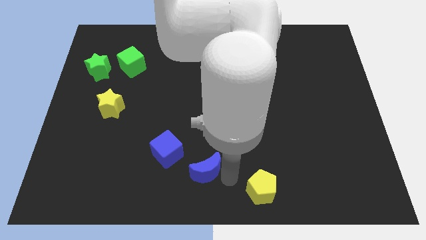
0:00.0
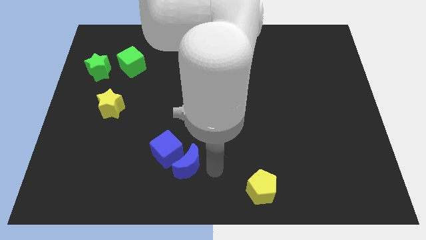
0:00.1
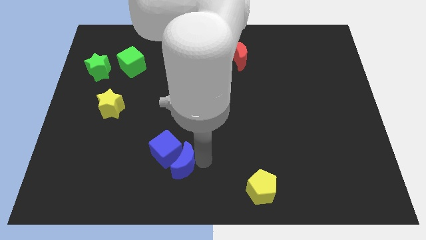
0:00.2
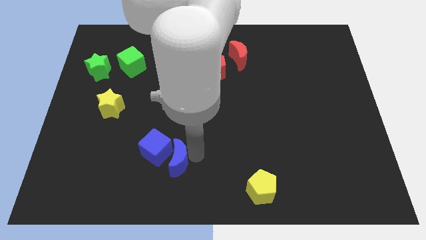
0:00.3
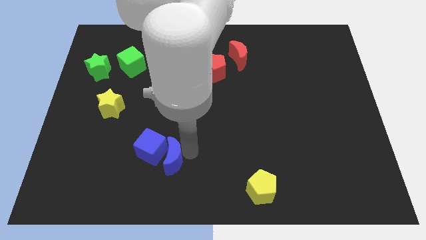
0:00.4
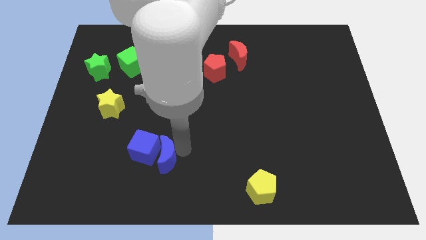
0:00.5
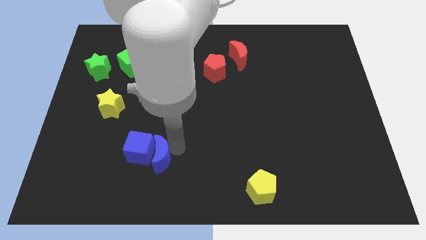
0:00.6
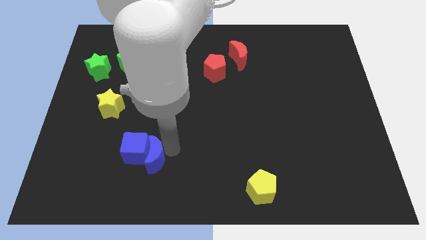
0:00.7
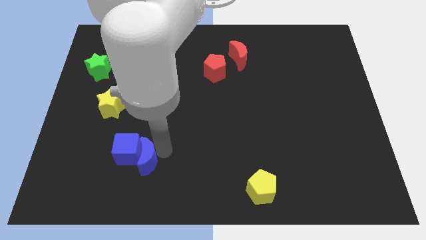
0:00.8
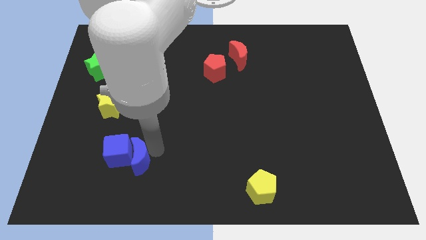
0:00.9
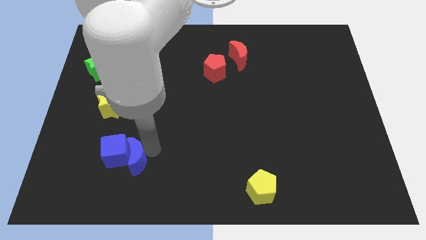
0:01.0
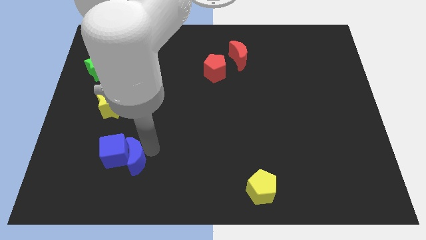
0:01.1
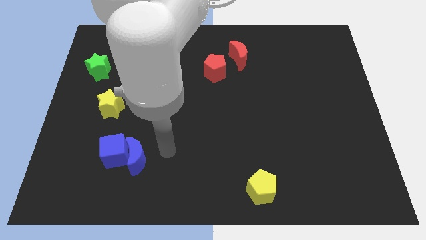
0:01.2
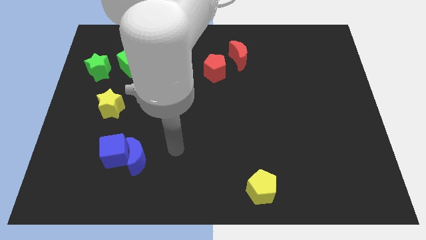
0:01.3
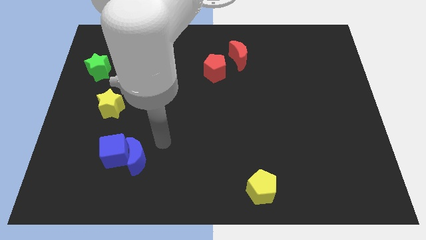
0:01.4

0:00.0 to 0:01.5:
push the blue cube using blue crescent to the bottom left of the board

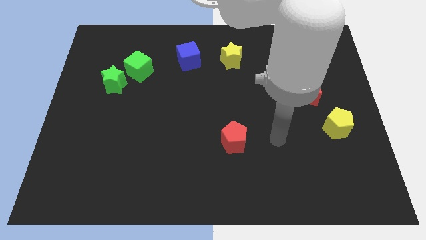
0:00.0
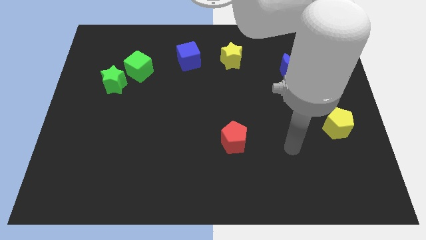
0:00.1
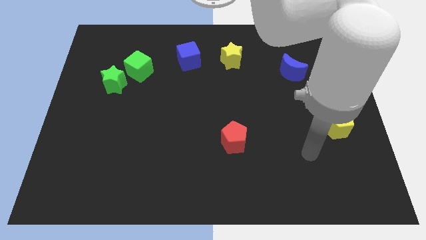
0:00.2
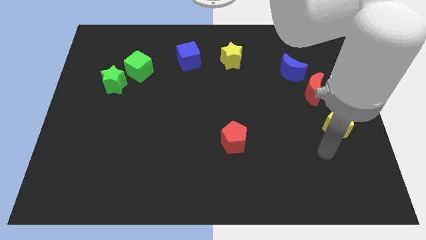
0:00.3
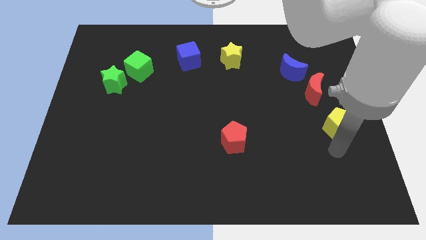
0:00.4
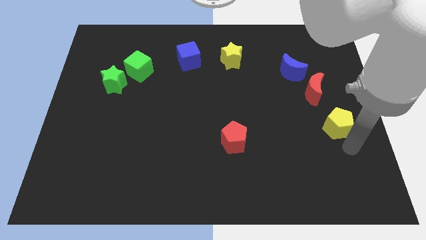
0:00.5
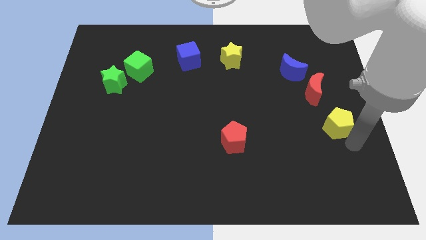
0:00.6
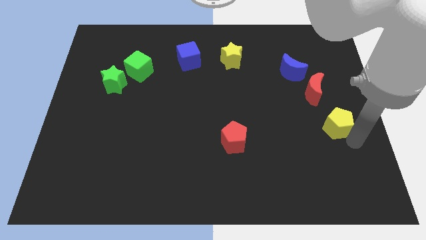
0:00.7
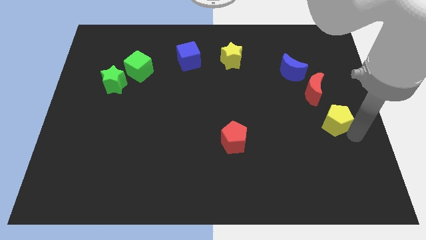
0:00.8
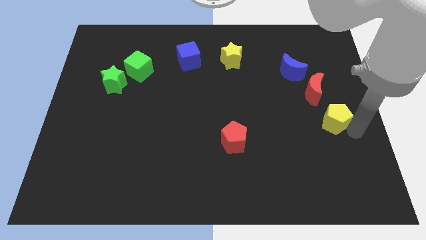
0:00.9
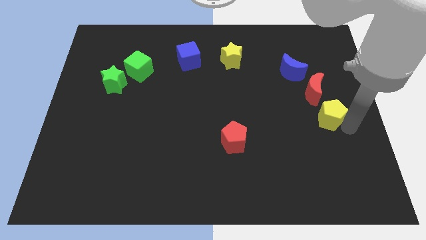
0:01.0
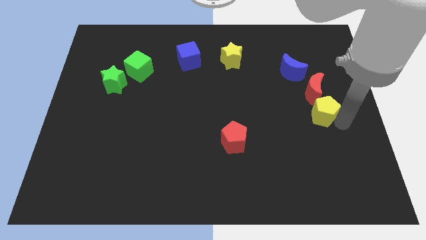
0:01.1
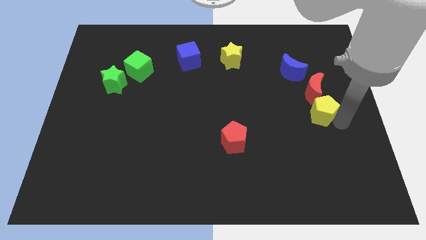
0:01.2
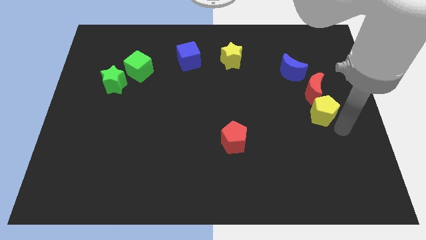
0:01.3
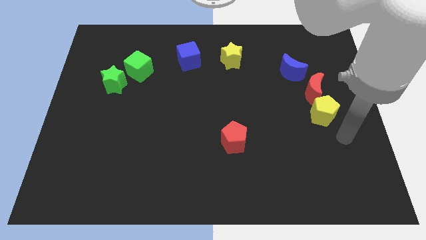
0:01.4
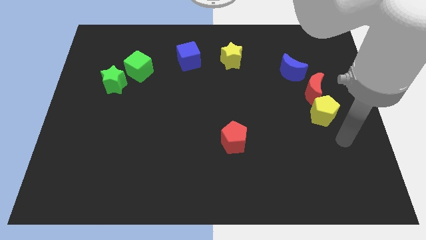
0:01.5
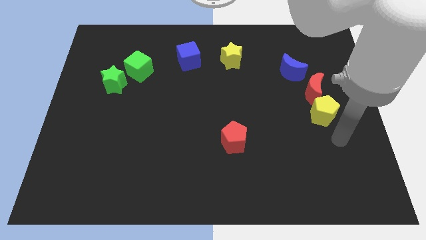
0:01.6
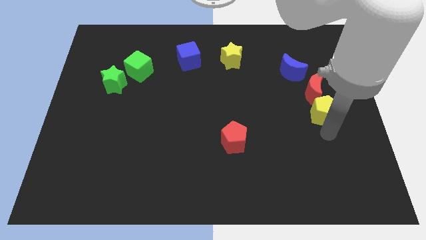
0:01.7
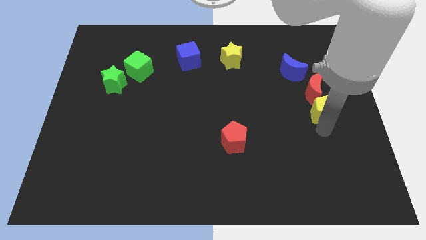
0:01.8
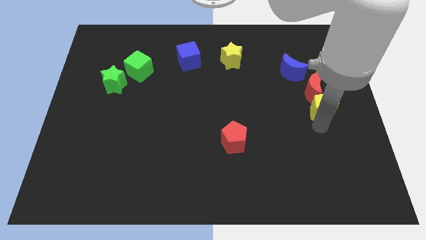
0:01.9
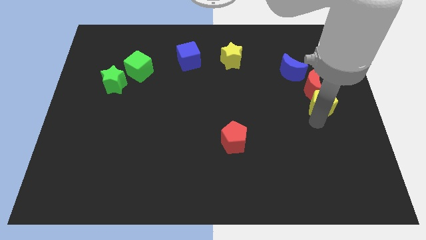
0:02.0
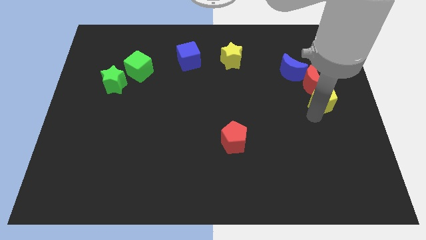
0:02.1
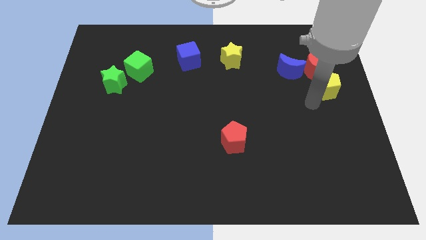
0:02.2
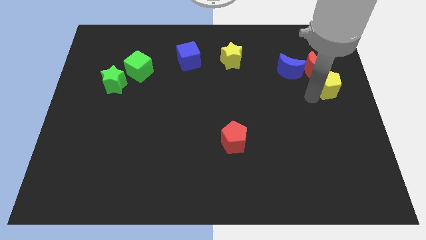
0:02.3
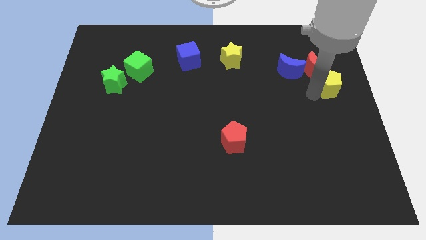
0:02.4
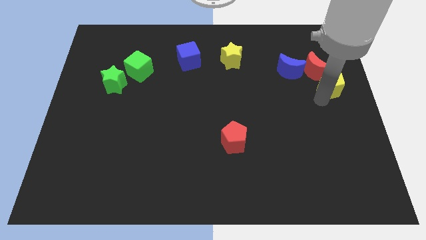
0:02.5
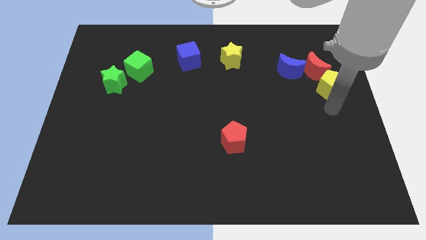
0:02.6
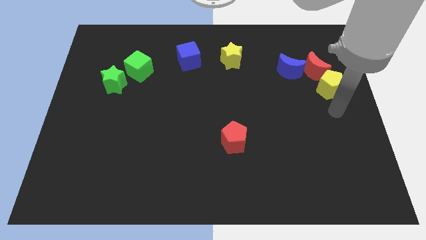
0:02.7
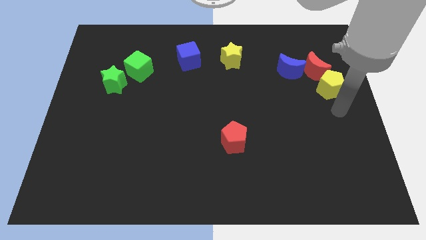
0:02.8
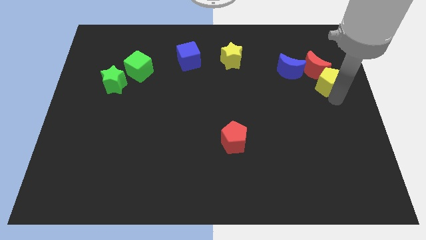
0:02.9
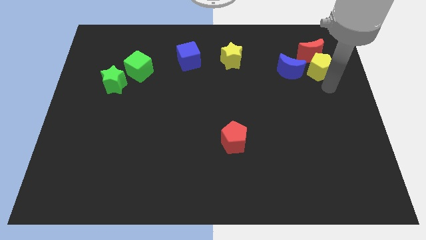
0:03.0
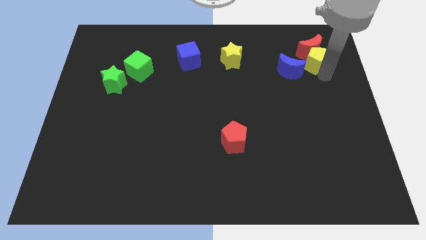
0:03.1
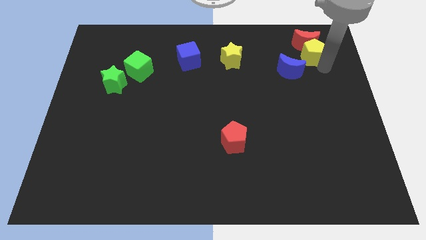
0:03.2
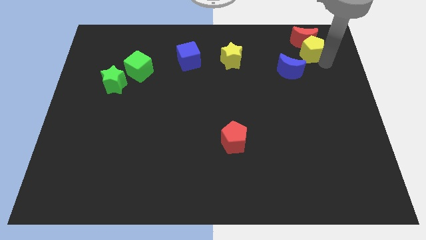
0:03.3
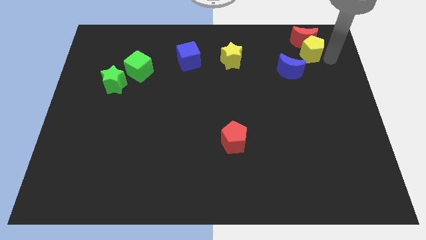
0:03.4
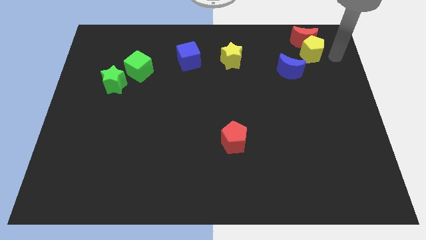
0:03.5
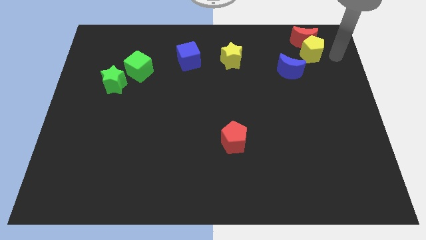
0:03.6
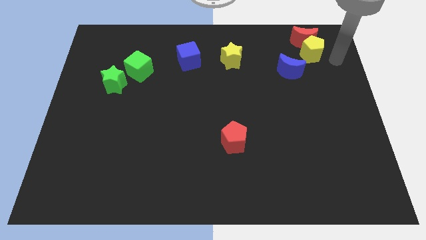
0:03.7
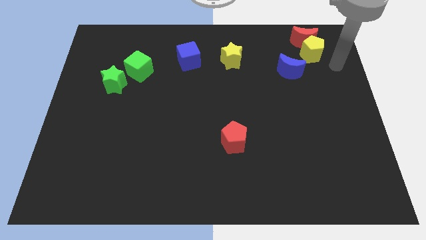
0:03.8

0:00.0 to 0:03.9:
move the yellow pentagon and red crescent to the top right of the board

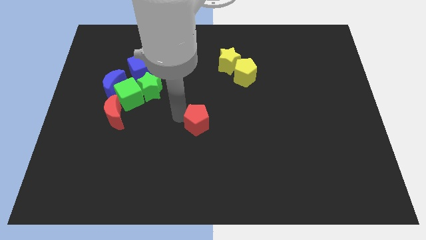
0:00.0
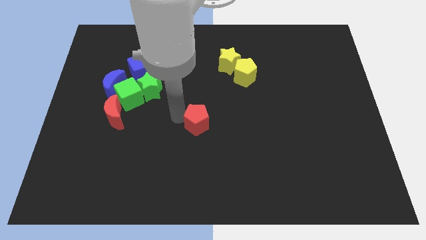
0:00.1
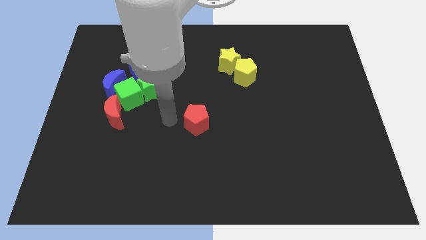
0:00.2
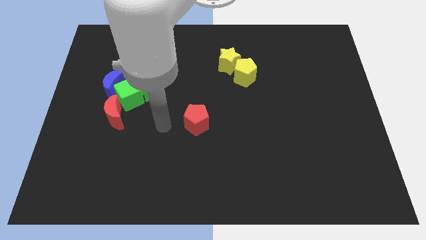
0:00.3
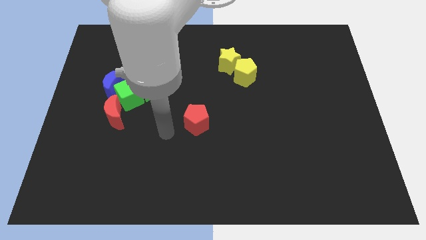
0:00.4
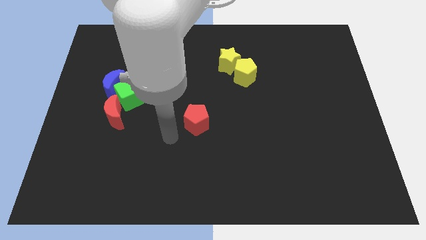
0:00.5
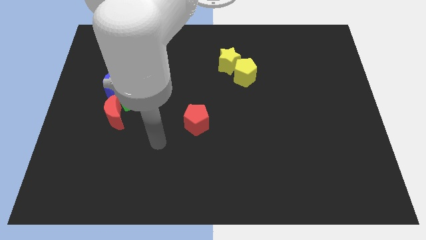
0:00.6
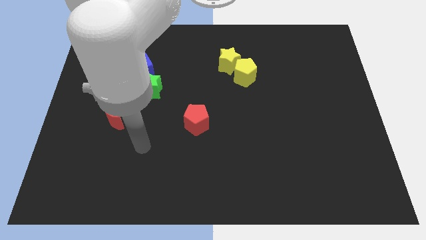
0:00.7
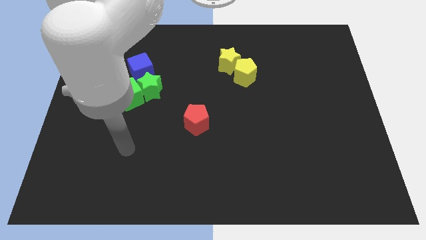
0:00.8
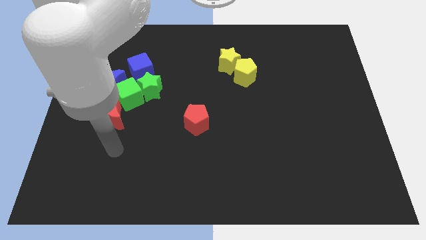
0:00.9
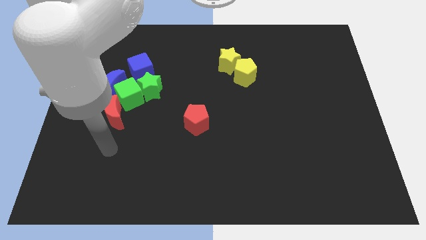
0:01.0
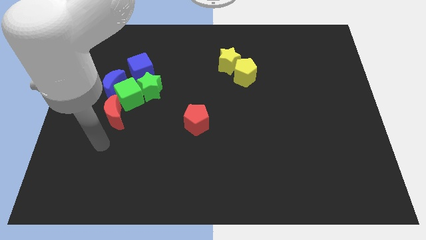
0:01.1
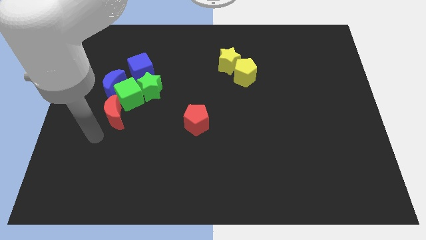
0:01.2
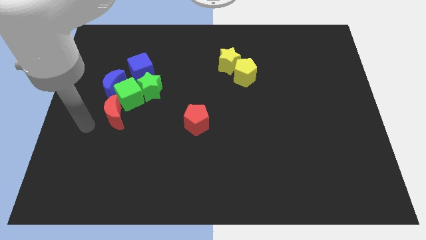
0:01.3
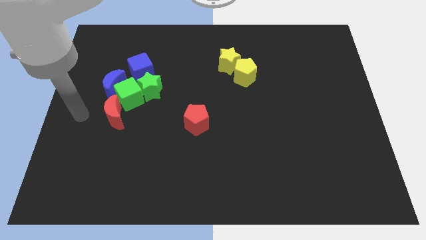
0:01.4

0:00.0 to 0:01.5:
move your arm towards the left side of the board

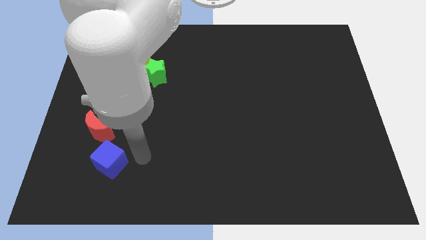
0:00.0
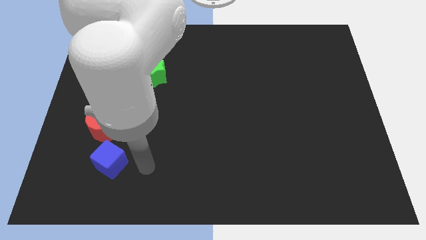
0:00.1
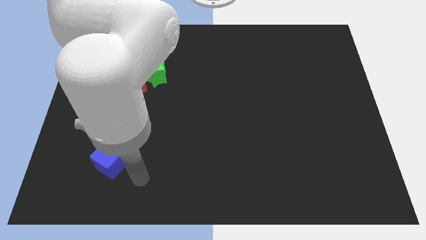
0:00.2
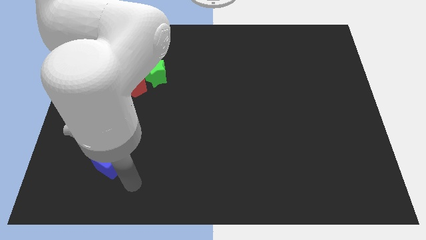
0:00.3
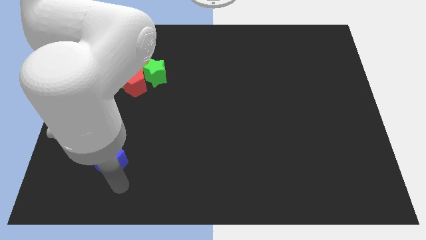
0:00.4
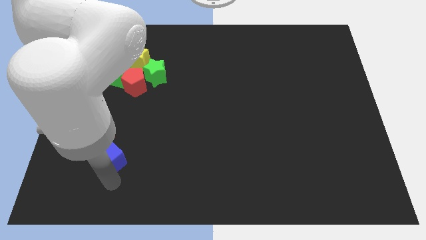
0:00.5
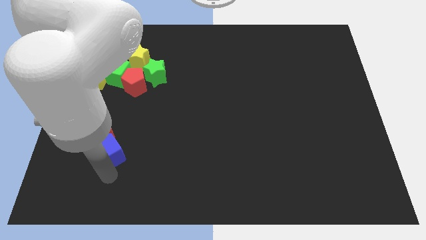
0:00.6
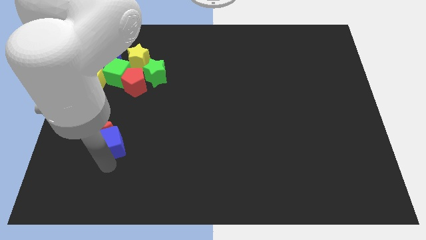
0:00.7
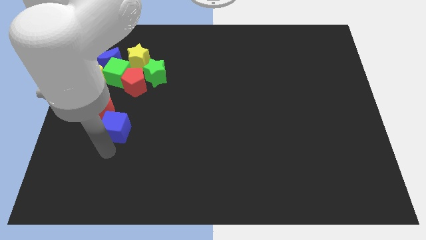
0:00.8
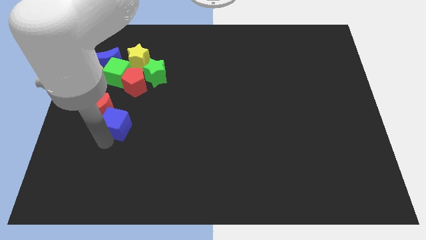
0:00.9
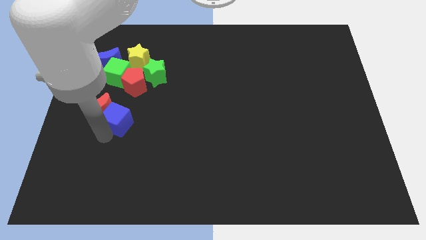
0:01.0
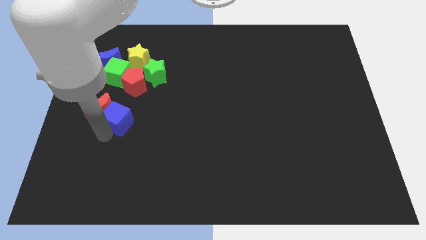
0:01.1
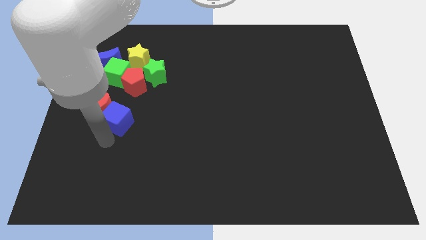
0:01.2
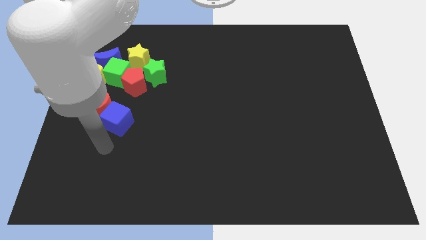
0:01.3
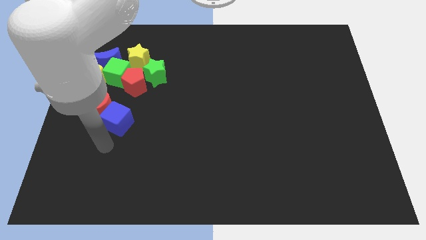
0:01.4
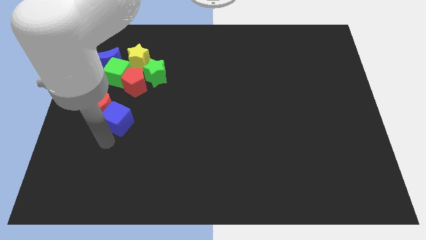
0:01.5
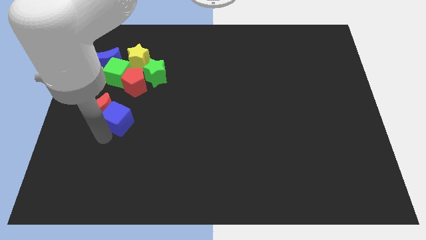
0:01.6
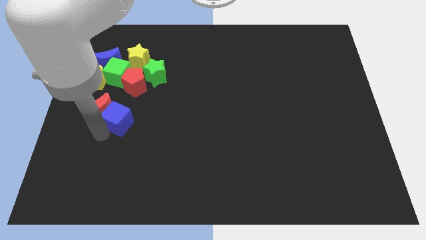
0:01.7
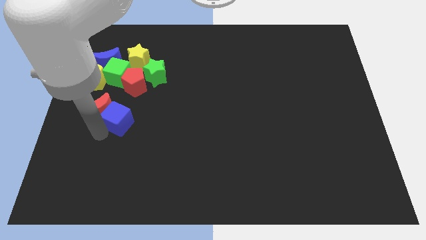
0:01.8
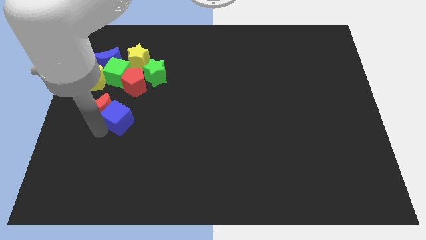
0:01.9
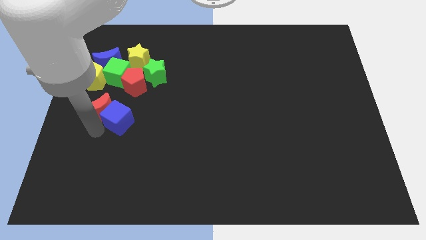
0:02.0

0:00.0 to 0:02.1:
move the blue cube and red moon towards bottom of group of blocks
